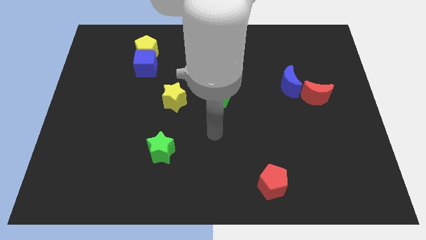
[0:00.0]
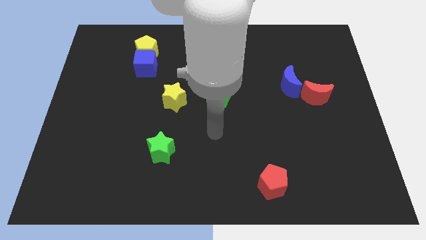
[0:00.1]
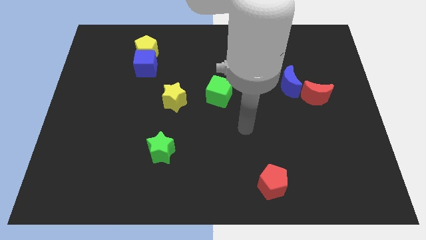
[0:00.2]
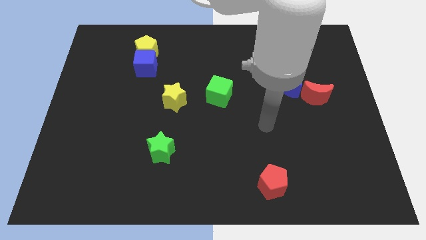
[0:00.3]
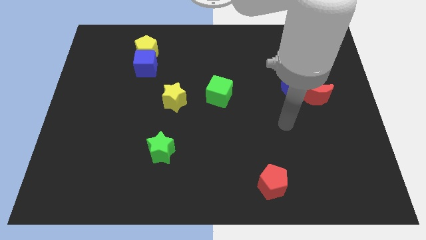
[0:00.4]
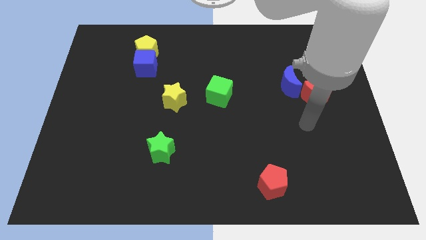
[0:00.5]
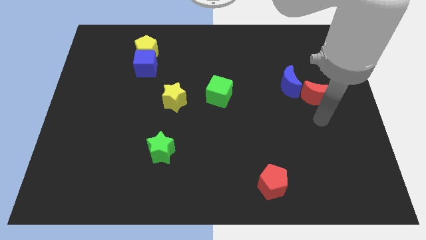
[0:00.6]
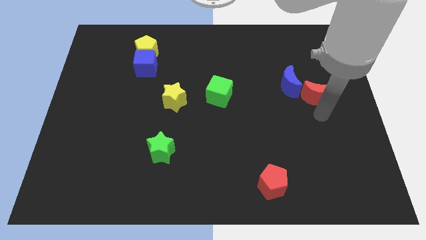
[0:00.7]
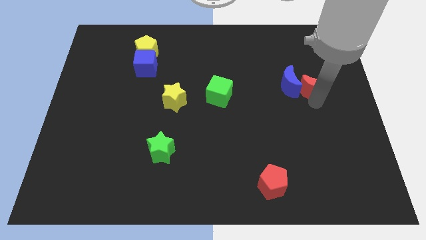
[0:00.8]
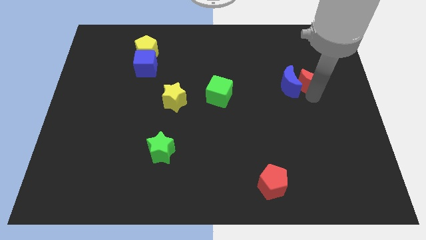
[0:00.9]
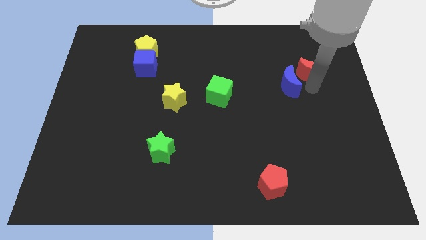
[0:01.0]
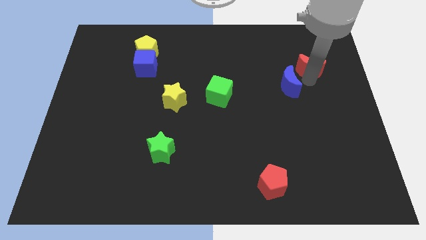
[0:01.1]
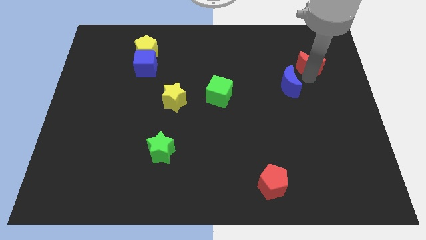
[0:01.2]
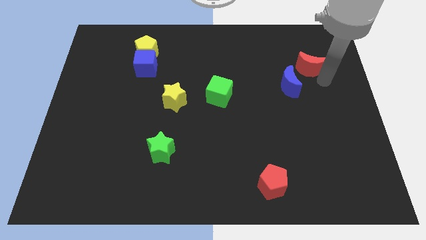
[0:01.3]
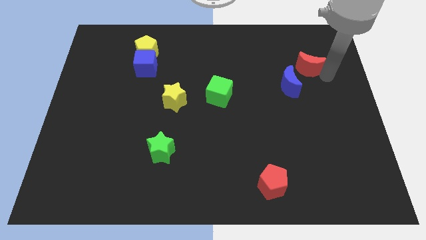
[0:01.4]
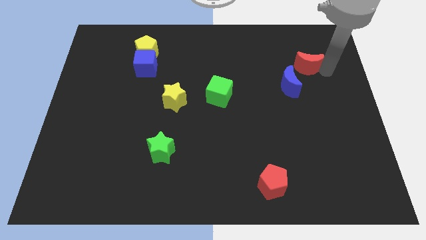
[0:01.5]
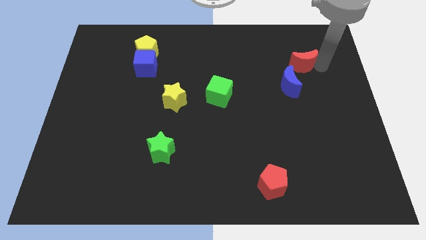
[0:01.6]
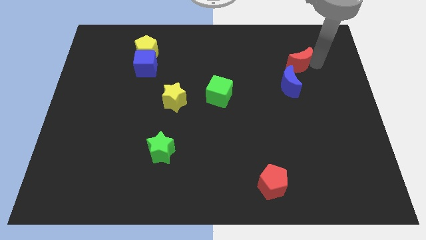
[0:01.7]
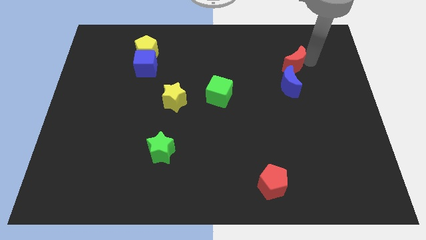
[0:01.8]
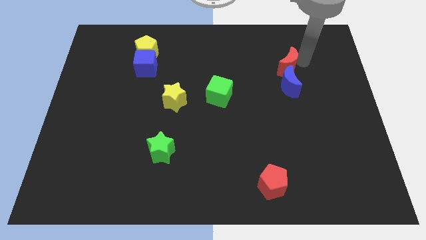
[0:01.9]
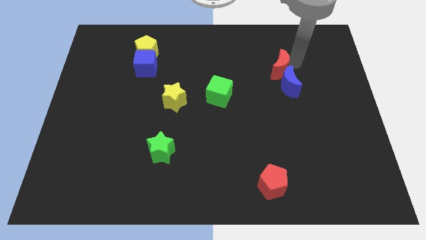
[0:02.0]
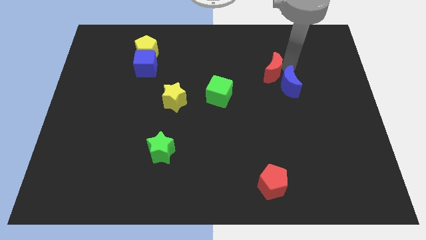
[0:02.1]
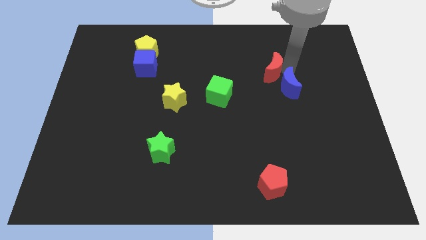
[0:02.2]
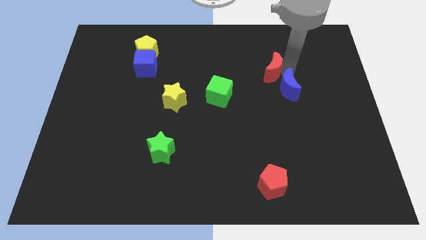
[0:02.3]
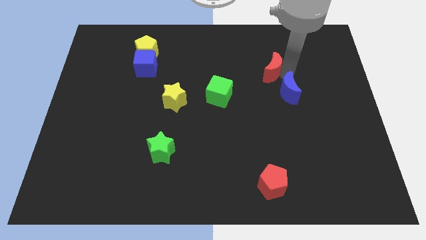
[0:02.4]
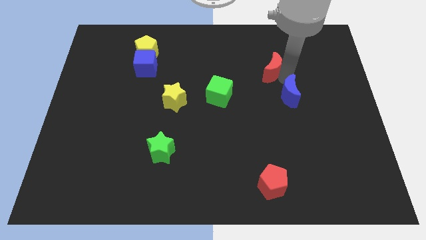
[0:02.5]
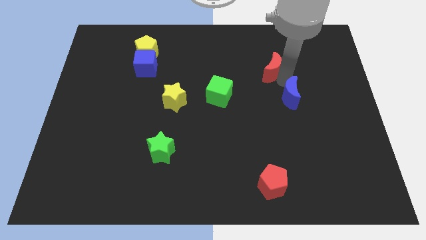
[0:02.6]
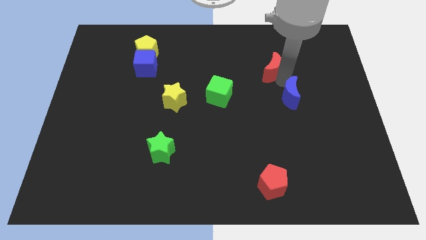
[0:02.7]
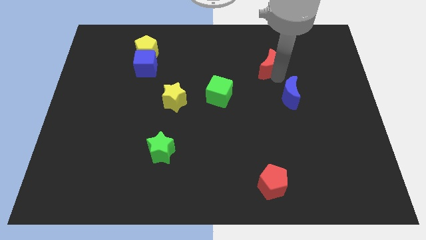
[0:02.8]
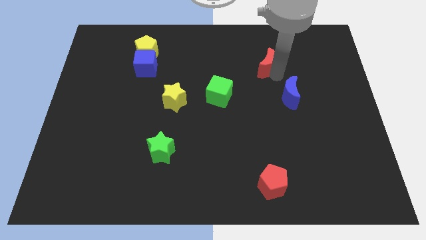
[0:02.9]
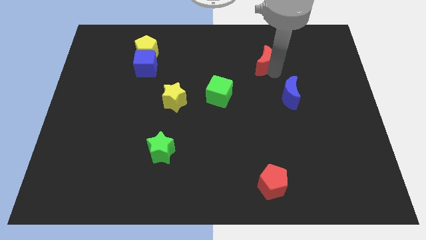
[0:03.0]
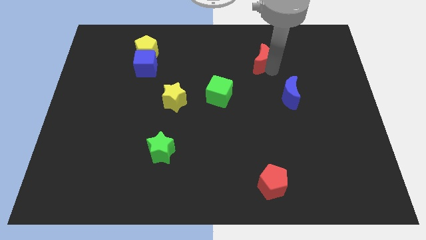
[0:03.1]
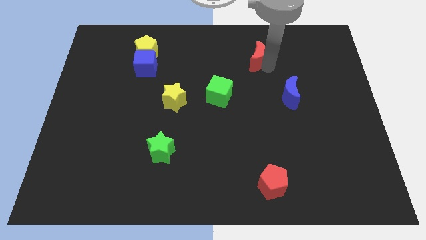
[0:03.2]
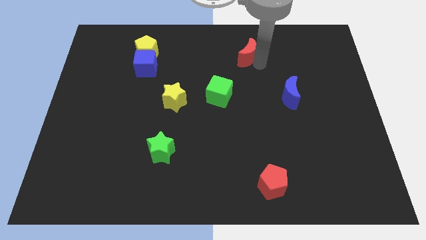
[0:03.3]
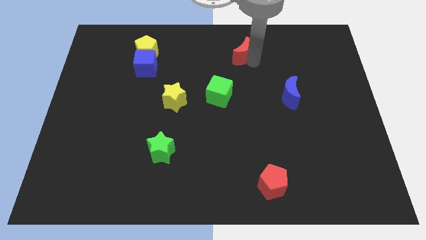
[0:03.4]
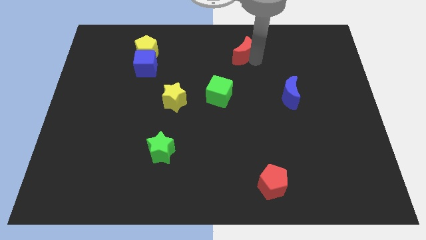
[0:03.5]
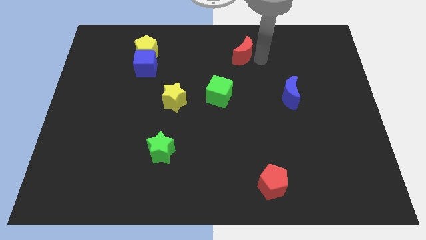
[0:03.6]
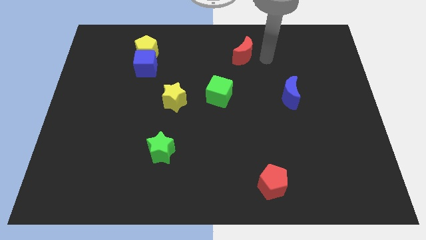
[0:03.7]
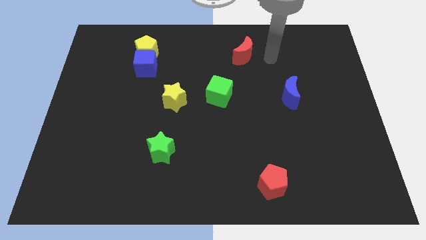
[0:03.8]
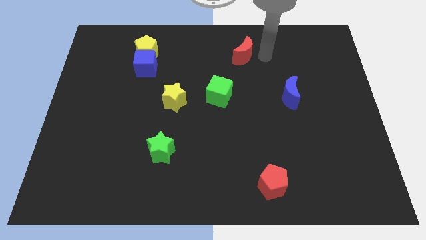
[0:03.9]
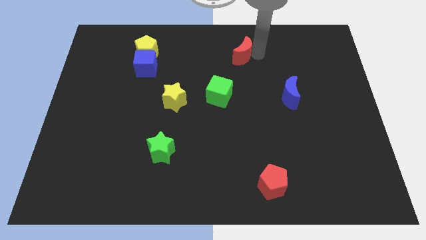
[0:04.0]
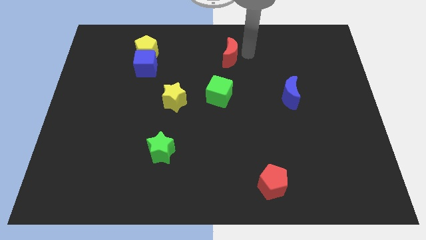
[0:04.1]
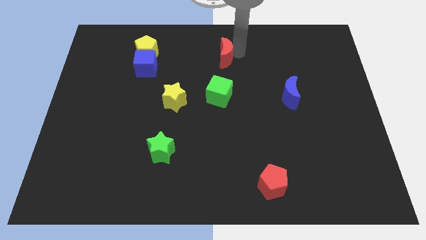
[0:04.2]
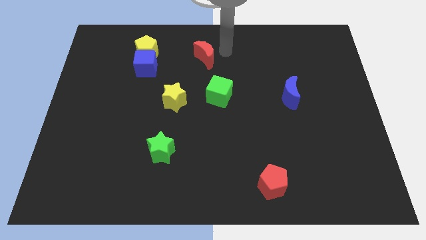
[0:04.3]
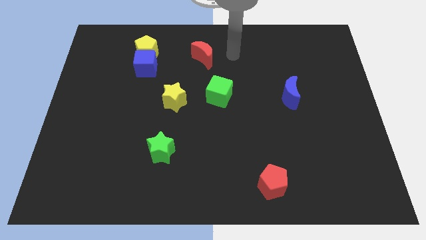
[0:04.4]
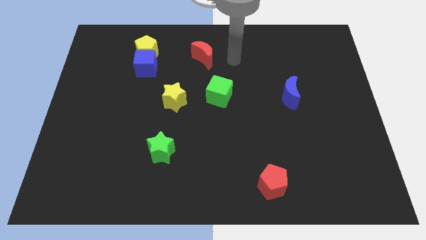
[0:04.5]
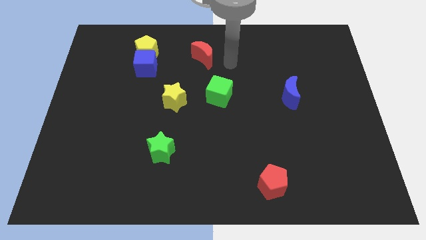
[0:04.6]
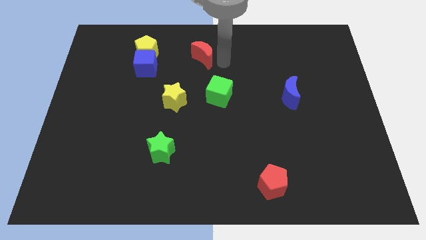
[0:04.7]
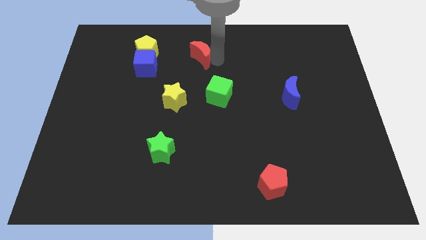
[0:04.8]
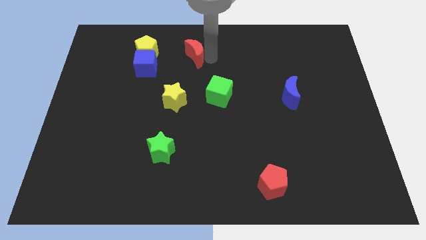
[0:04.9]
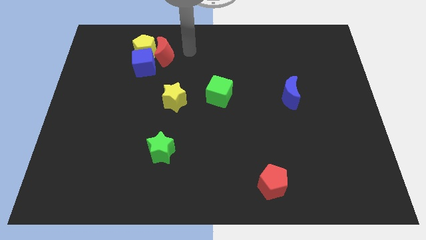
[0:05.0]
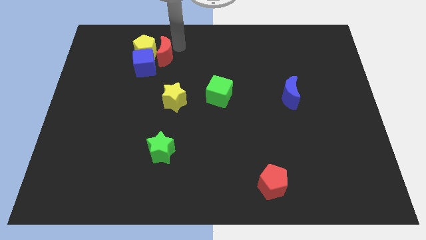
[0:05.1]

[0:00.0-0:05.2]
slide the red moon close to the yellow pentagon

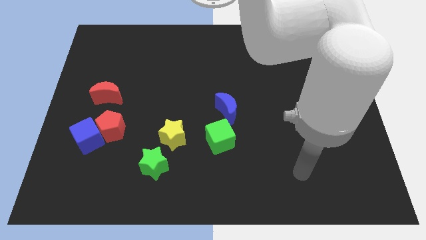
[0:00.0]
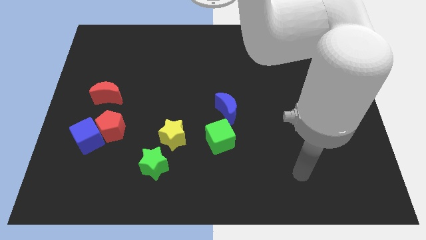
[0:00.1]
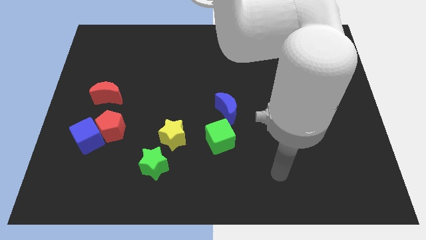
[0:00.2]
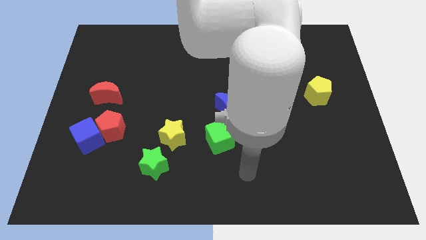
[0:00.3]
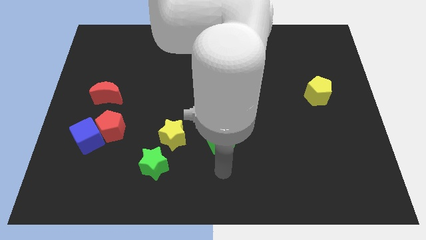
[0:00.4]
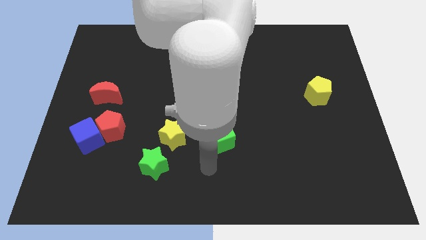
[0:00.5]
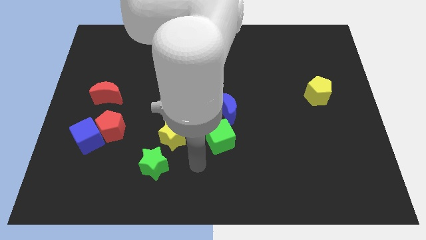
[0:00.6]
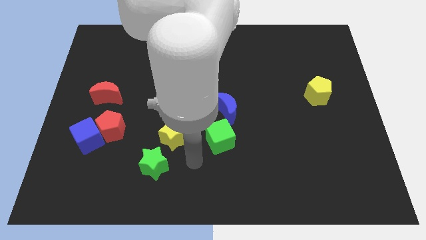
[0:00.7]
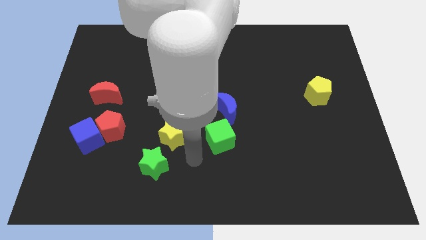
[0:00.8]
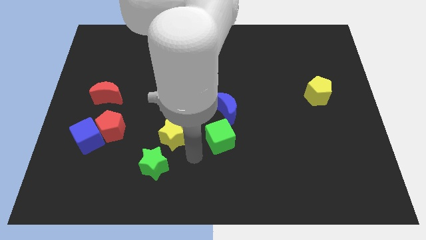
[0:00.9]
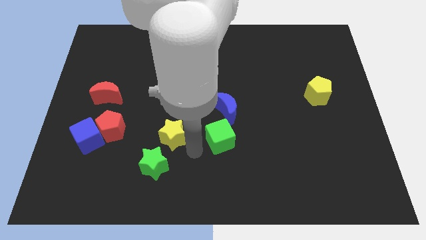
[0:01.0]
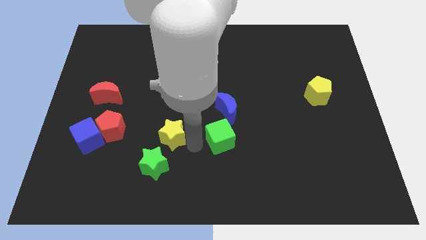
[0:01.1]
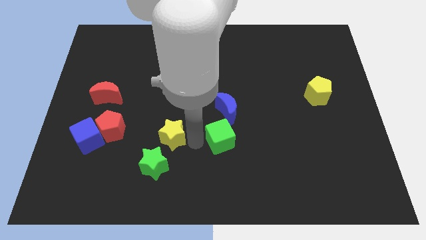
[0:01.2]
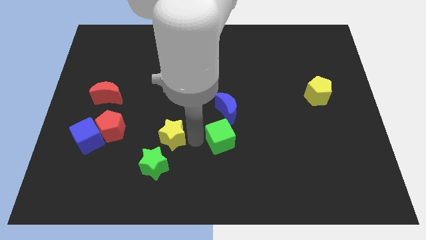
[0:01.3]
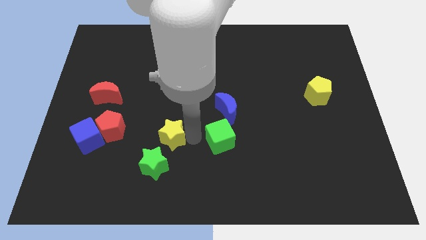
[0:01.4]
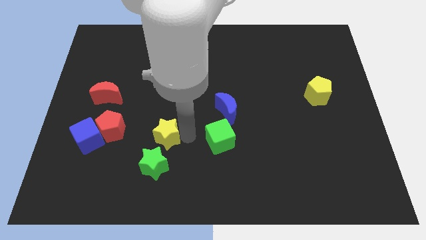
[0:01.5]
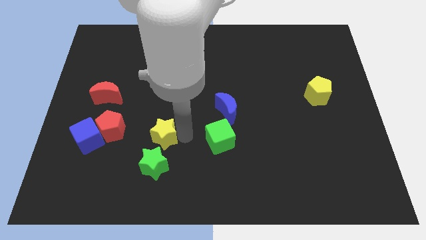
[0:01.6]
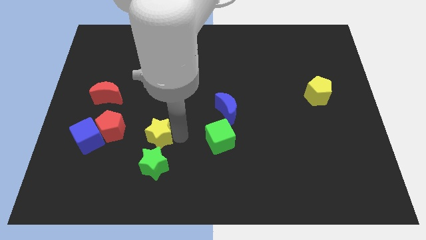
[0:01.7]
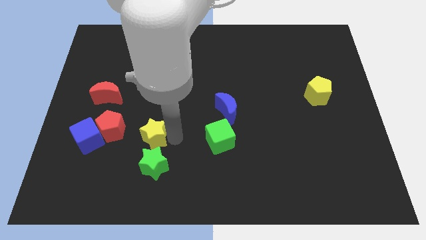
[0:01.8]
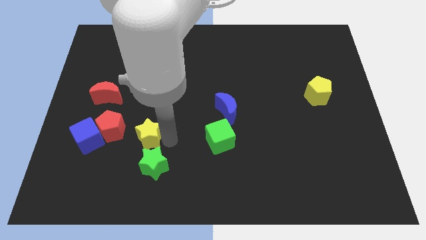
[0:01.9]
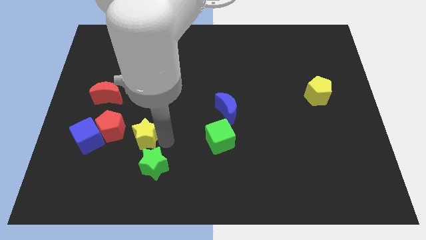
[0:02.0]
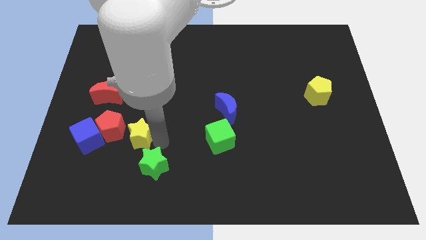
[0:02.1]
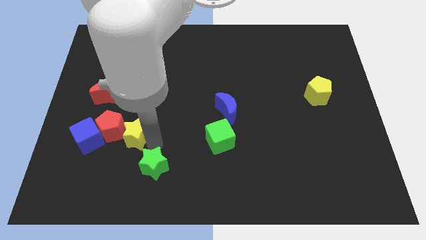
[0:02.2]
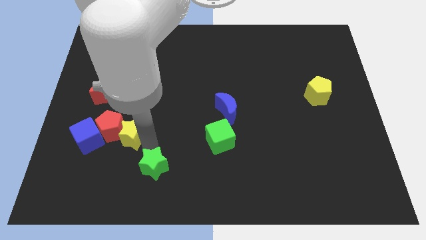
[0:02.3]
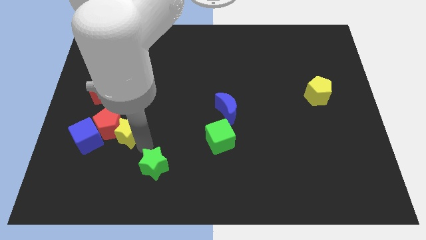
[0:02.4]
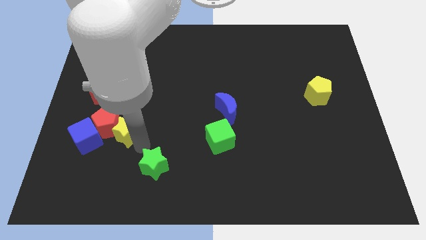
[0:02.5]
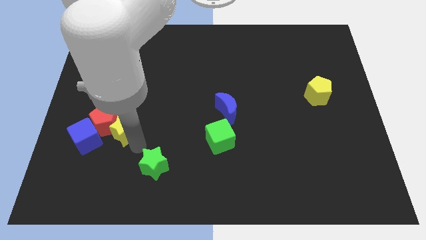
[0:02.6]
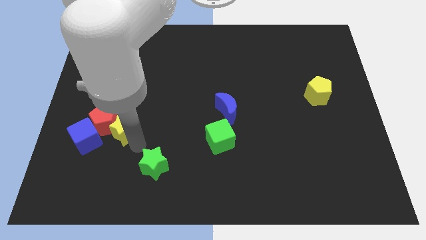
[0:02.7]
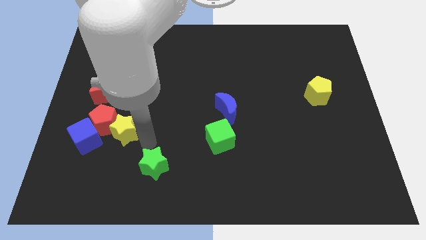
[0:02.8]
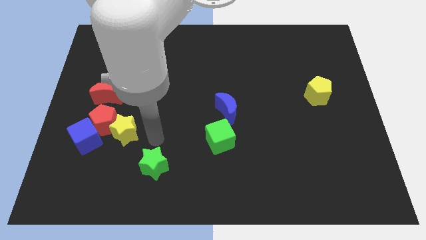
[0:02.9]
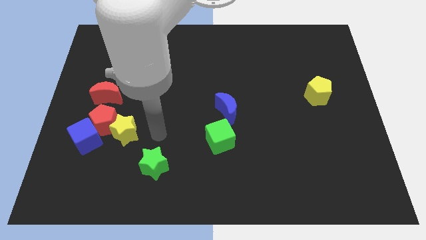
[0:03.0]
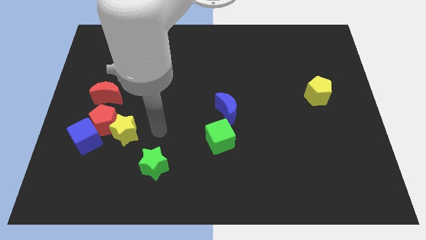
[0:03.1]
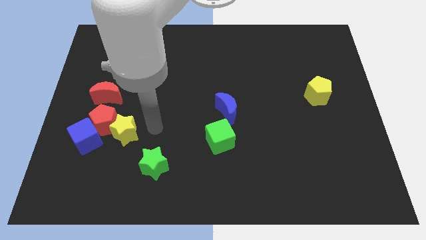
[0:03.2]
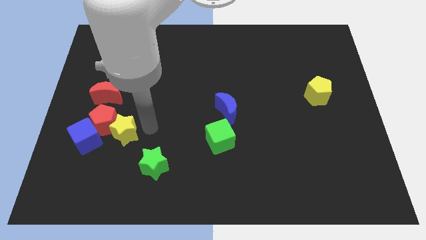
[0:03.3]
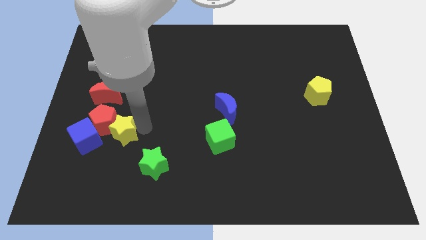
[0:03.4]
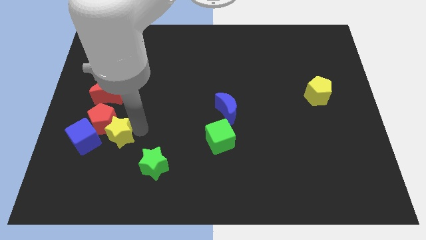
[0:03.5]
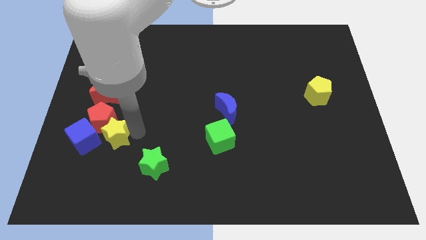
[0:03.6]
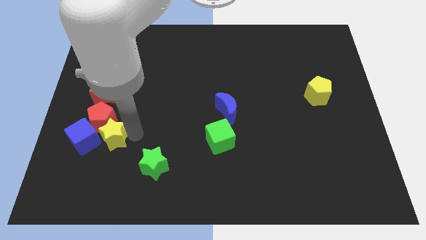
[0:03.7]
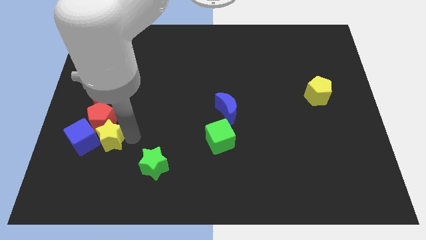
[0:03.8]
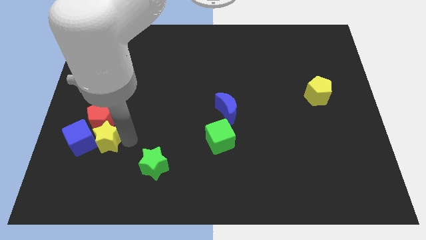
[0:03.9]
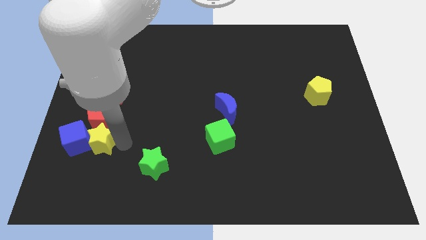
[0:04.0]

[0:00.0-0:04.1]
slide the yellow star close to the blue cube
